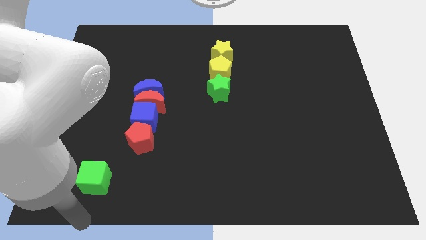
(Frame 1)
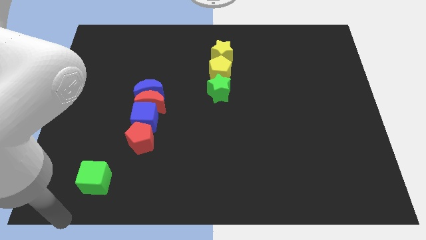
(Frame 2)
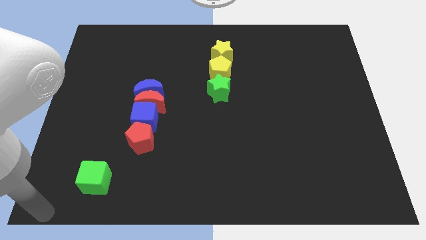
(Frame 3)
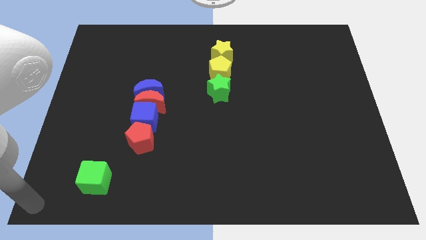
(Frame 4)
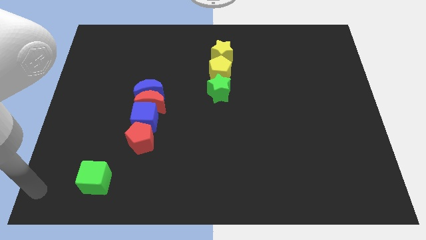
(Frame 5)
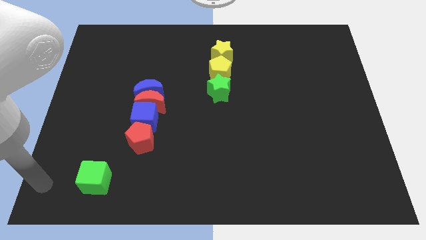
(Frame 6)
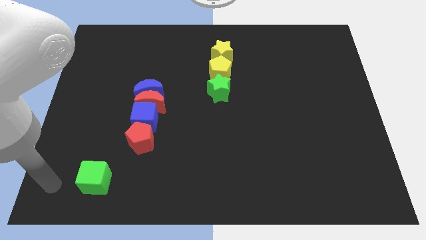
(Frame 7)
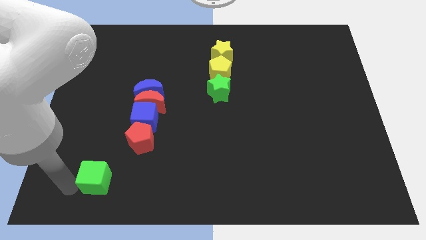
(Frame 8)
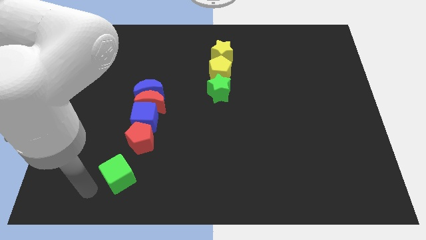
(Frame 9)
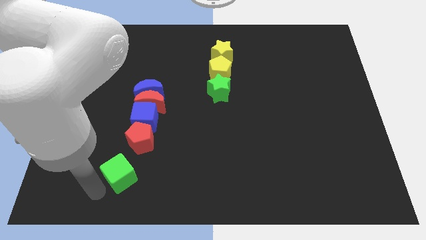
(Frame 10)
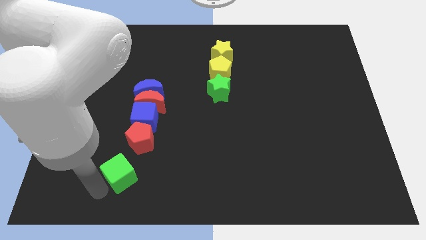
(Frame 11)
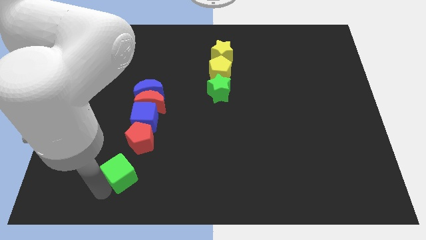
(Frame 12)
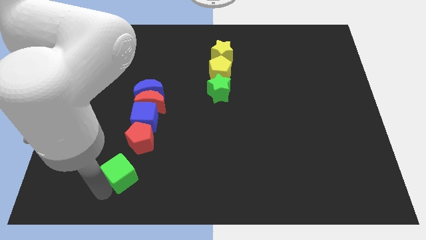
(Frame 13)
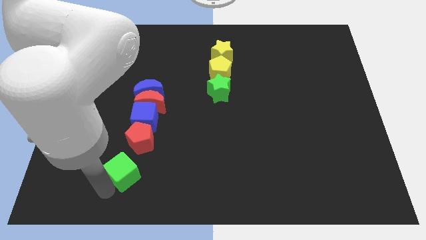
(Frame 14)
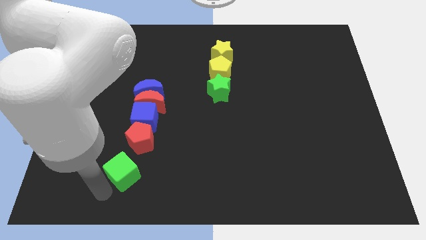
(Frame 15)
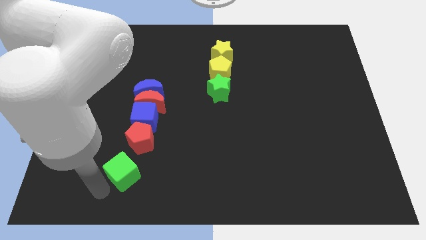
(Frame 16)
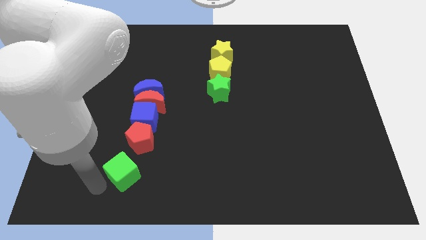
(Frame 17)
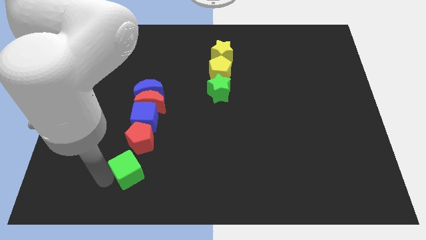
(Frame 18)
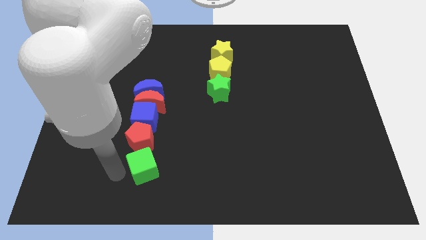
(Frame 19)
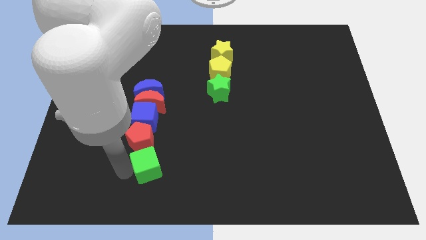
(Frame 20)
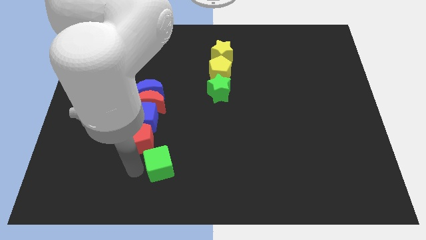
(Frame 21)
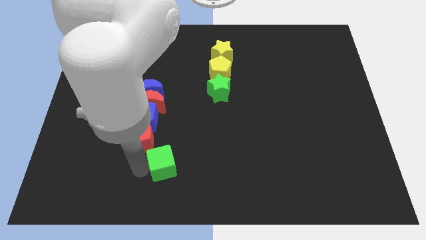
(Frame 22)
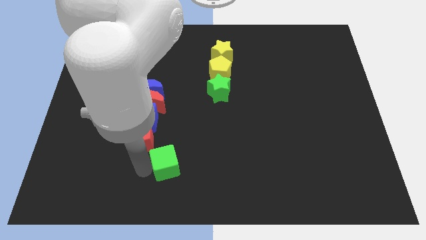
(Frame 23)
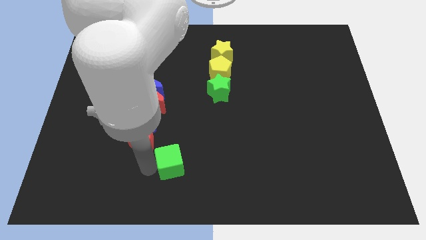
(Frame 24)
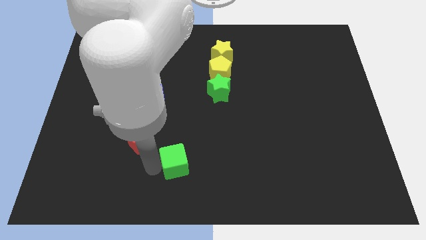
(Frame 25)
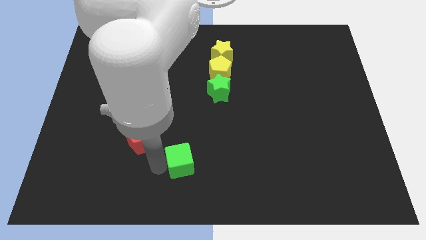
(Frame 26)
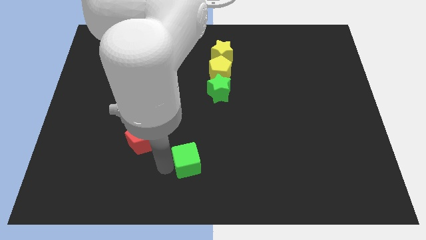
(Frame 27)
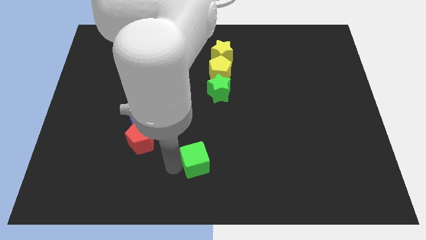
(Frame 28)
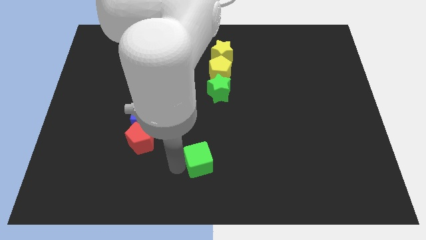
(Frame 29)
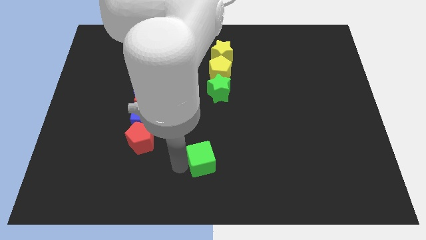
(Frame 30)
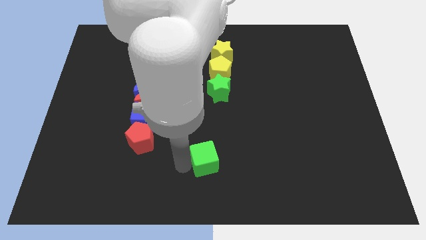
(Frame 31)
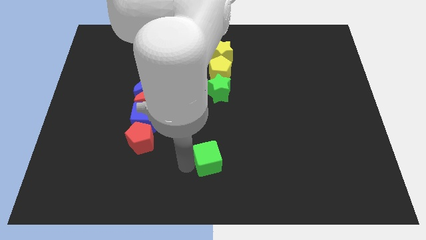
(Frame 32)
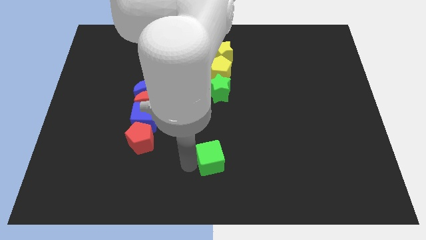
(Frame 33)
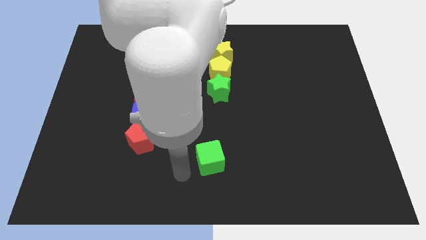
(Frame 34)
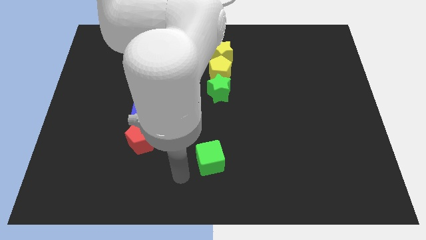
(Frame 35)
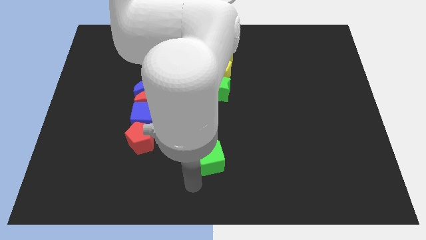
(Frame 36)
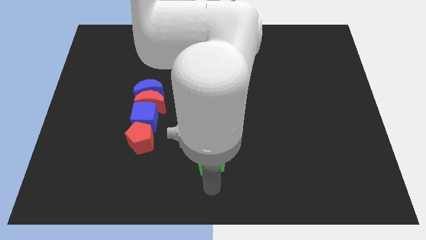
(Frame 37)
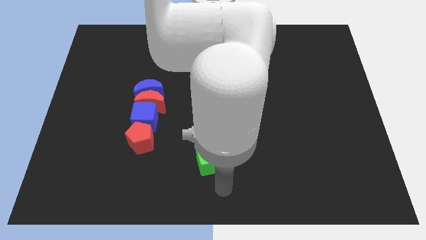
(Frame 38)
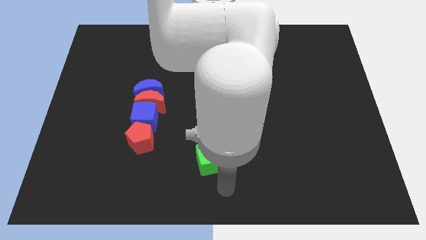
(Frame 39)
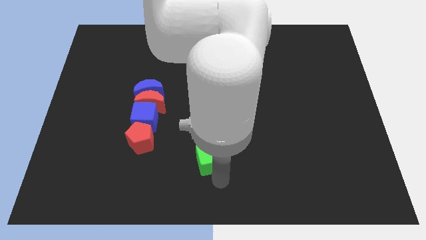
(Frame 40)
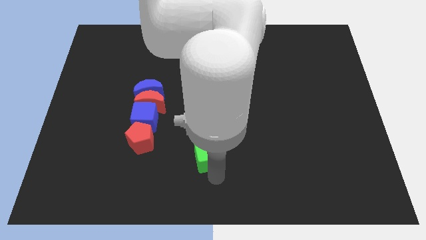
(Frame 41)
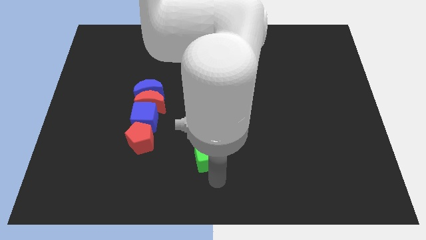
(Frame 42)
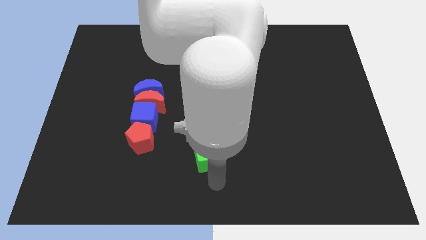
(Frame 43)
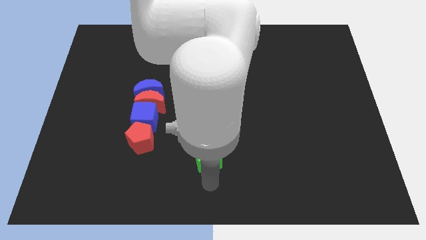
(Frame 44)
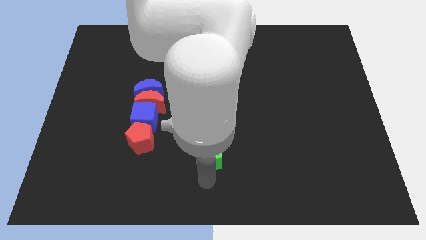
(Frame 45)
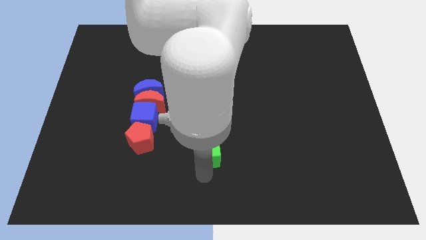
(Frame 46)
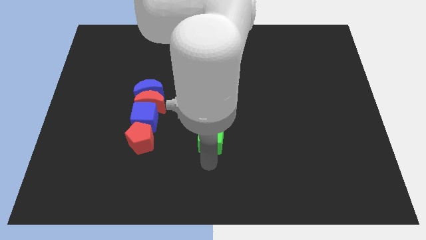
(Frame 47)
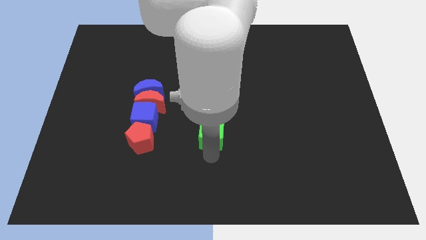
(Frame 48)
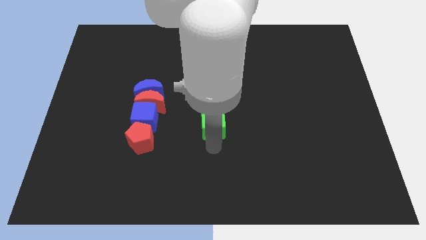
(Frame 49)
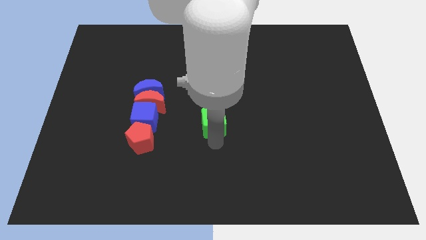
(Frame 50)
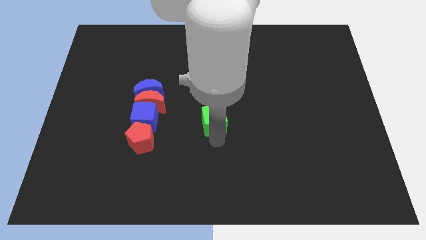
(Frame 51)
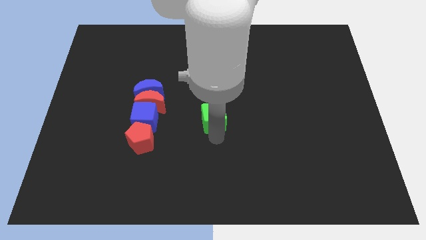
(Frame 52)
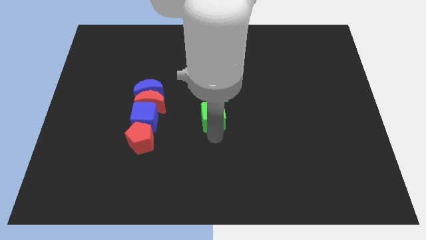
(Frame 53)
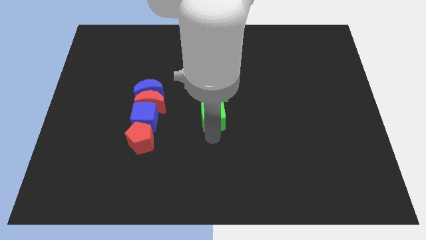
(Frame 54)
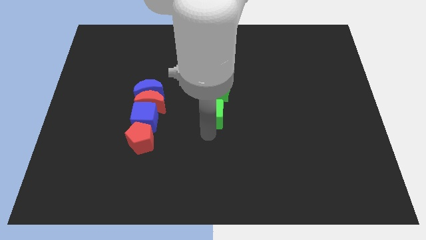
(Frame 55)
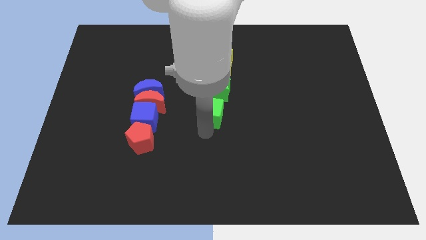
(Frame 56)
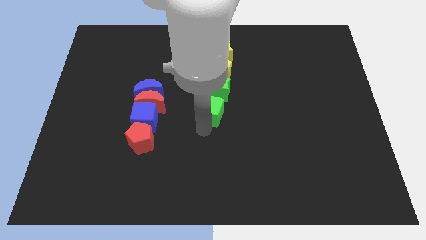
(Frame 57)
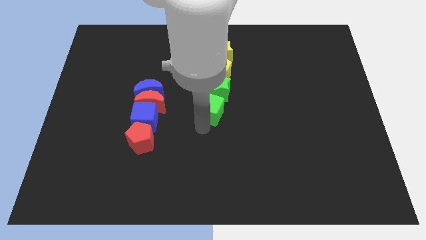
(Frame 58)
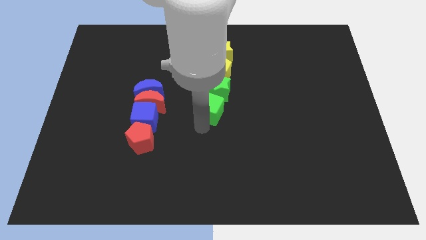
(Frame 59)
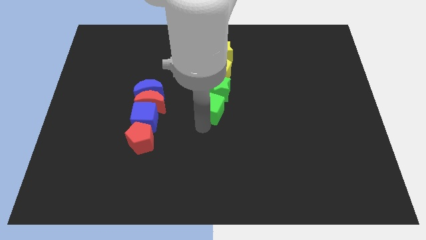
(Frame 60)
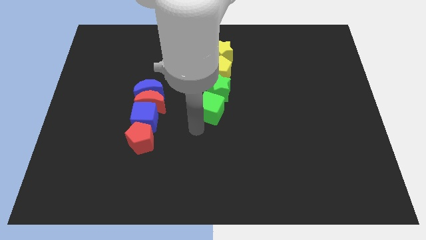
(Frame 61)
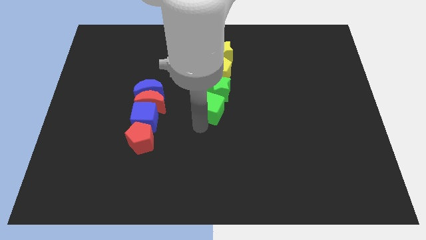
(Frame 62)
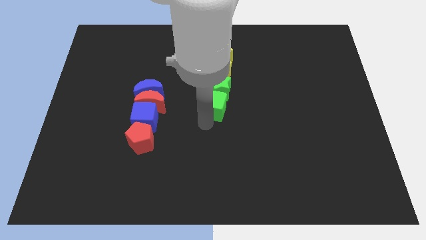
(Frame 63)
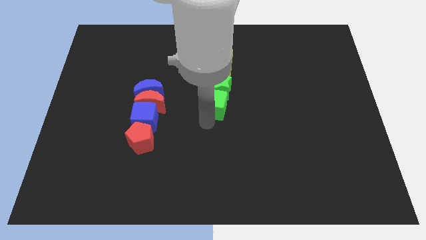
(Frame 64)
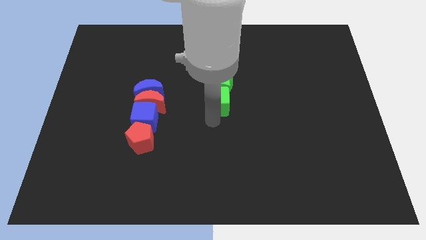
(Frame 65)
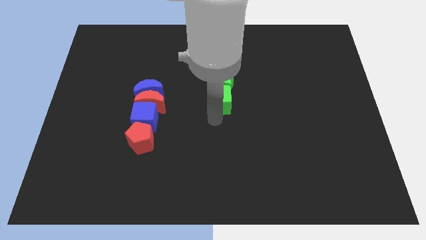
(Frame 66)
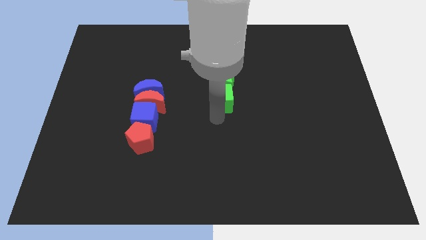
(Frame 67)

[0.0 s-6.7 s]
drag the green cube to the bottom of the green star

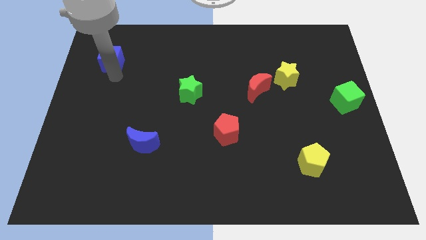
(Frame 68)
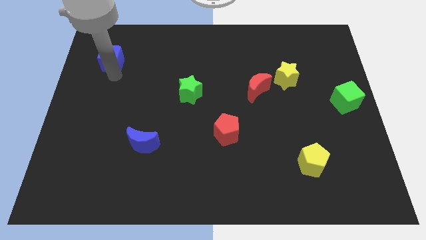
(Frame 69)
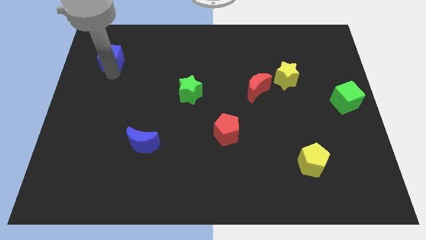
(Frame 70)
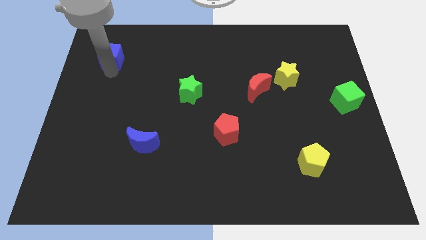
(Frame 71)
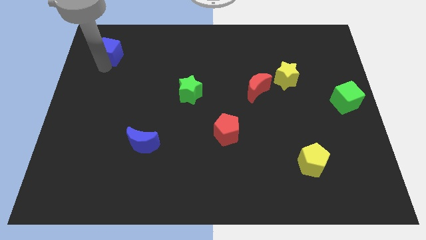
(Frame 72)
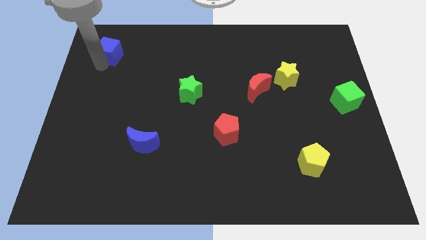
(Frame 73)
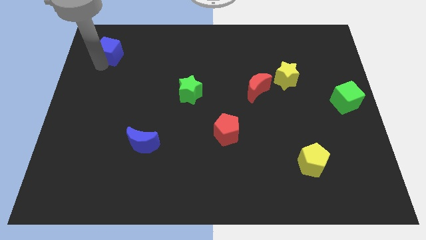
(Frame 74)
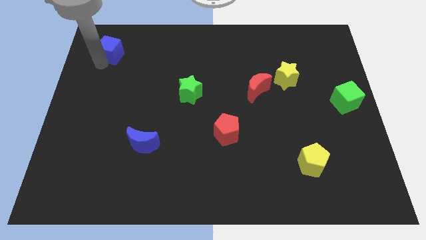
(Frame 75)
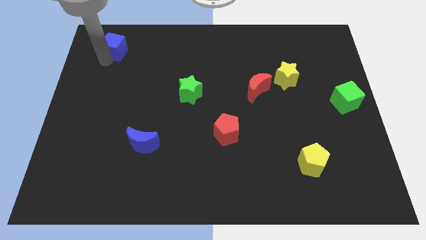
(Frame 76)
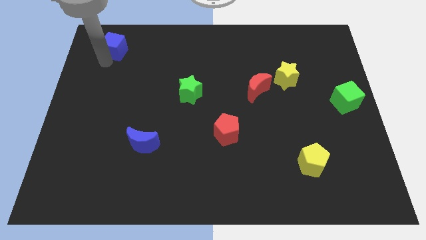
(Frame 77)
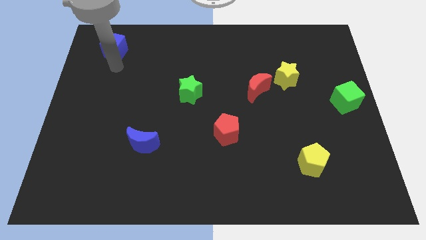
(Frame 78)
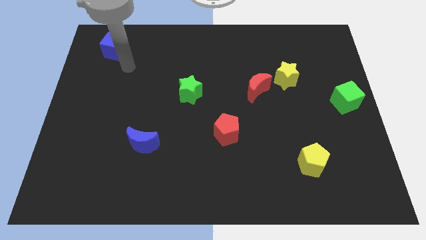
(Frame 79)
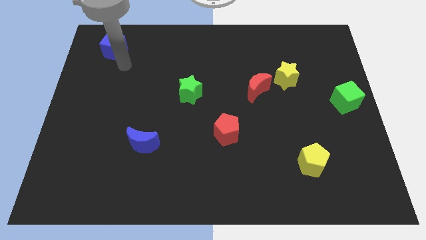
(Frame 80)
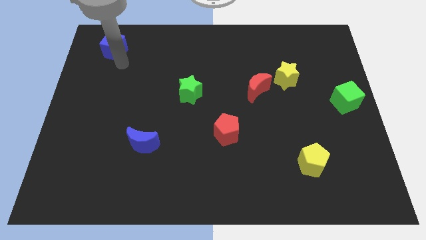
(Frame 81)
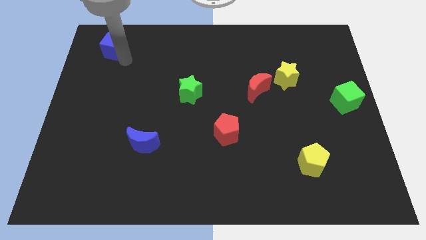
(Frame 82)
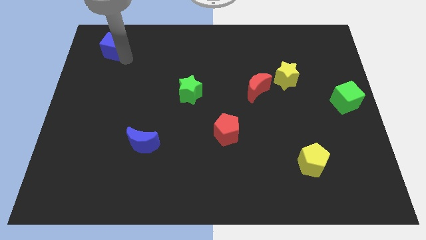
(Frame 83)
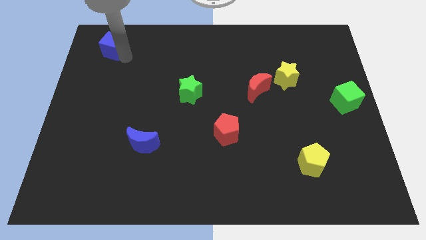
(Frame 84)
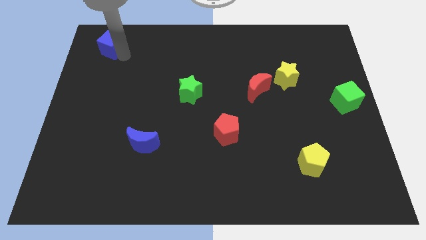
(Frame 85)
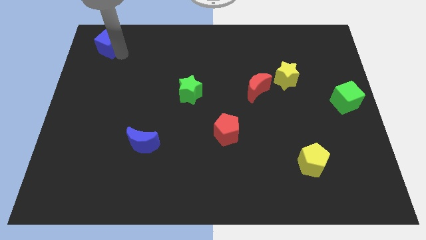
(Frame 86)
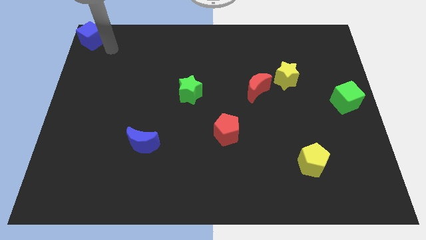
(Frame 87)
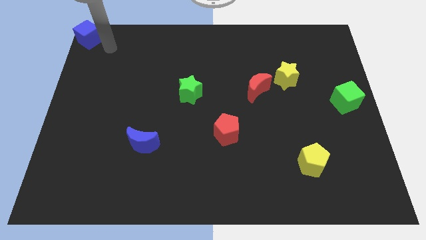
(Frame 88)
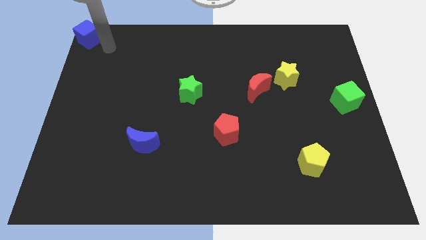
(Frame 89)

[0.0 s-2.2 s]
place the blue cube to the top left corner of the board
